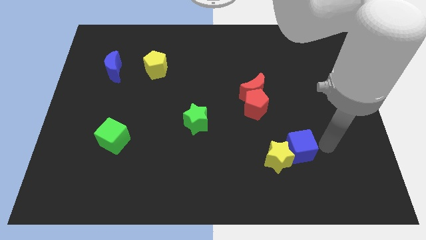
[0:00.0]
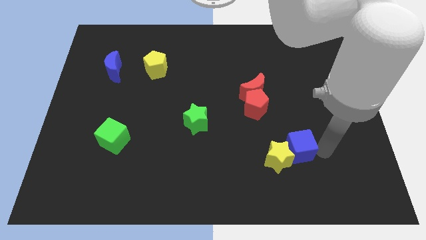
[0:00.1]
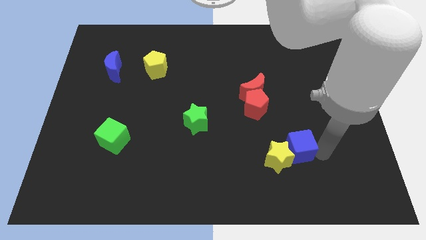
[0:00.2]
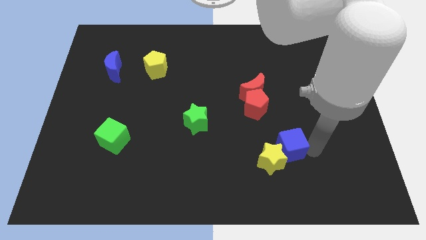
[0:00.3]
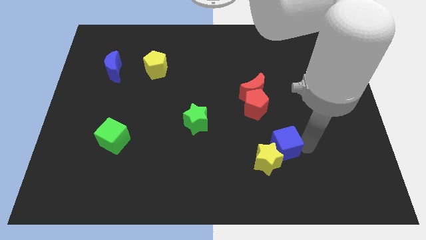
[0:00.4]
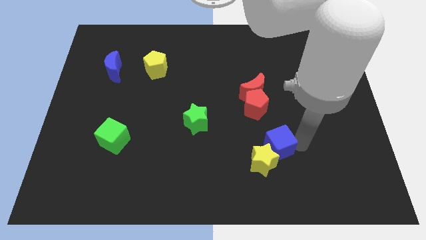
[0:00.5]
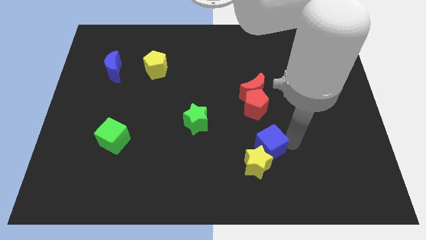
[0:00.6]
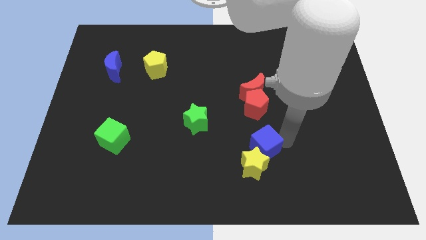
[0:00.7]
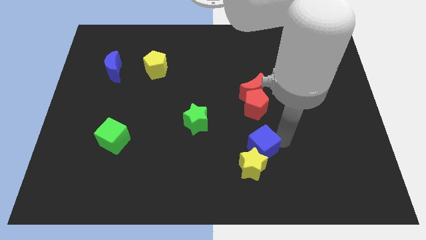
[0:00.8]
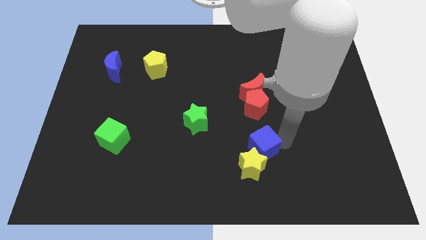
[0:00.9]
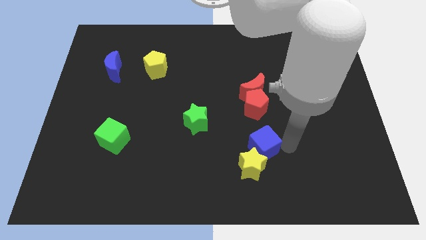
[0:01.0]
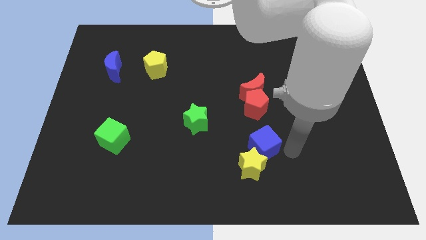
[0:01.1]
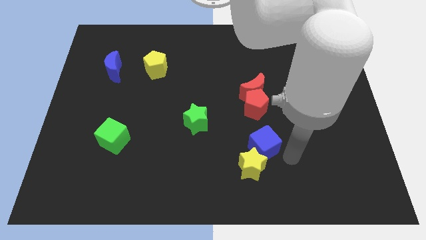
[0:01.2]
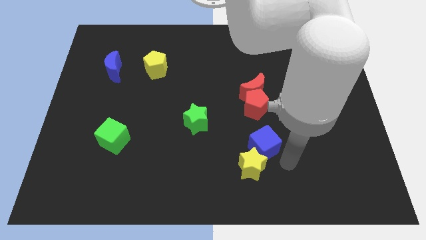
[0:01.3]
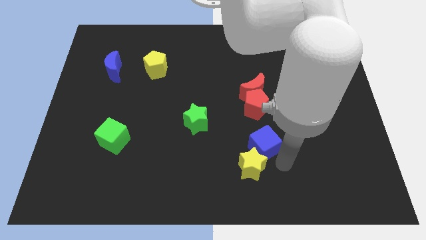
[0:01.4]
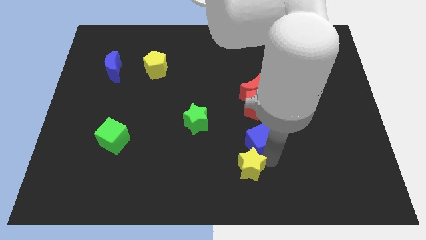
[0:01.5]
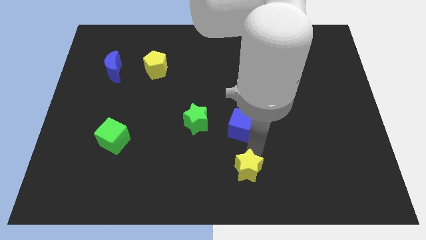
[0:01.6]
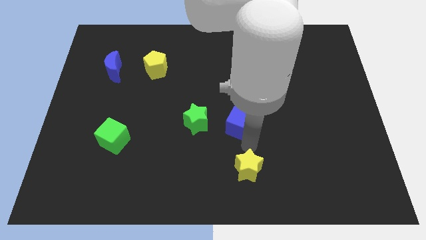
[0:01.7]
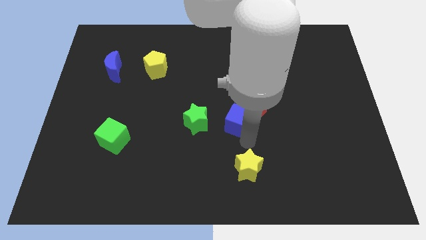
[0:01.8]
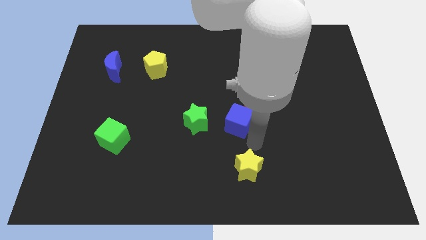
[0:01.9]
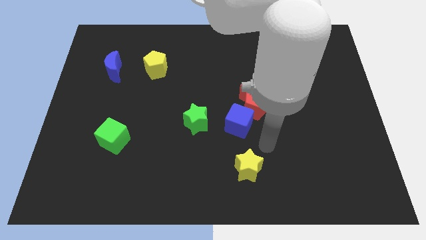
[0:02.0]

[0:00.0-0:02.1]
separate the blue cube and yellow star

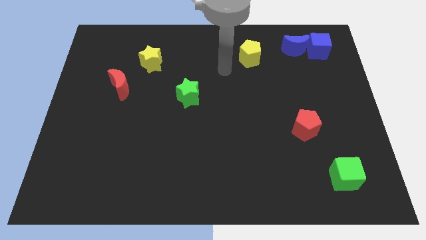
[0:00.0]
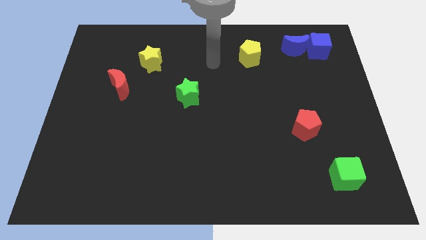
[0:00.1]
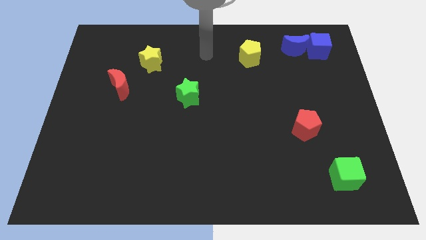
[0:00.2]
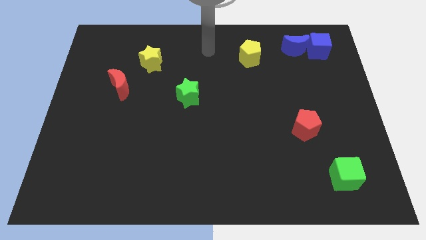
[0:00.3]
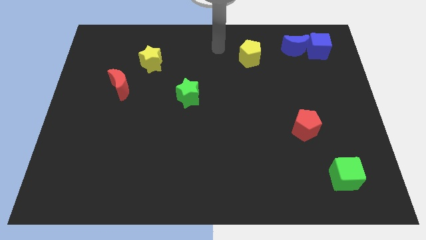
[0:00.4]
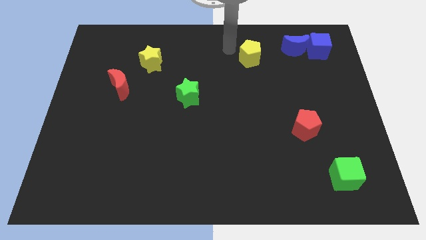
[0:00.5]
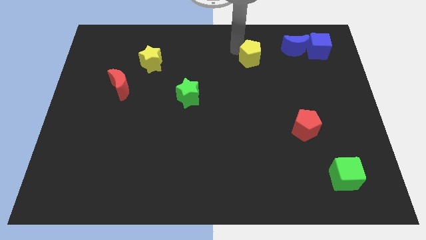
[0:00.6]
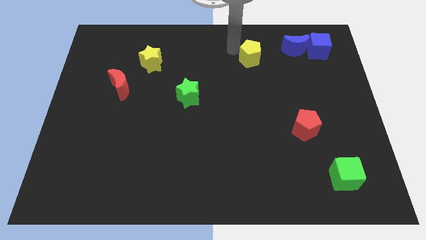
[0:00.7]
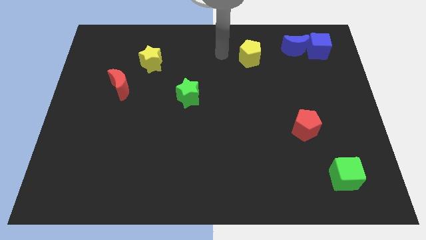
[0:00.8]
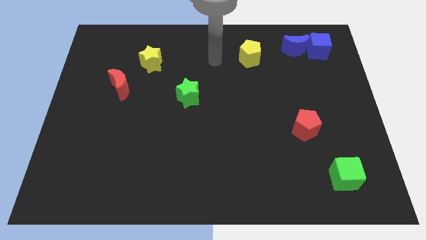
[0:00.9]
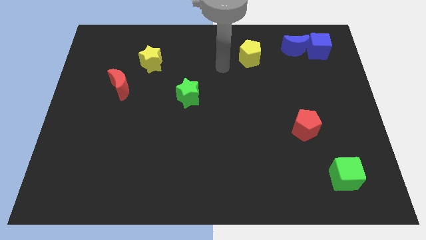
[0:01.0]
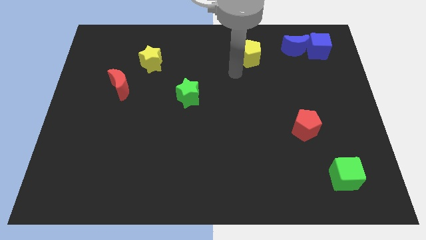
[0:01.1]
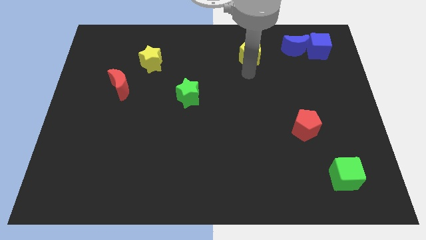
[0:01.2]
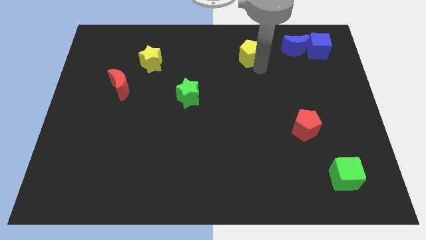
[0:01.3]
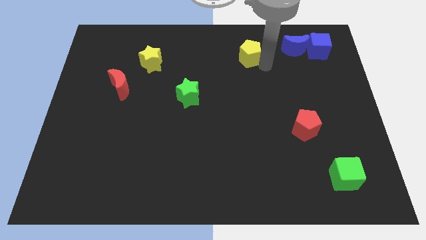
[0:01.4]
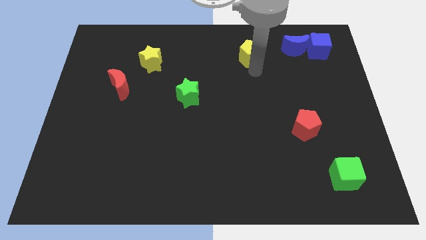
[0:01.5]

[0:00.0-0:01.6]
place the pointer at the bottom of the yellow pentagon

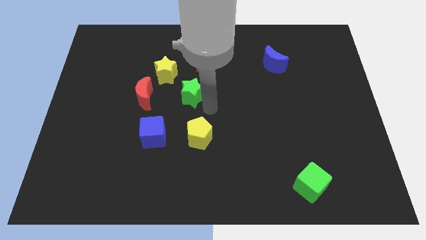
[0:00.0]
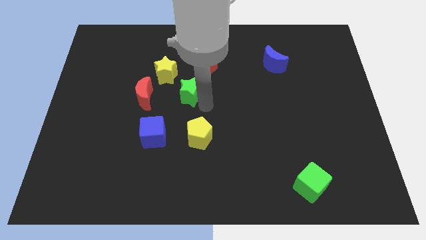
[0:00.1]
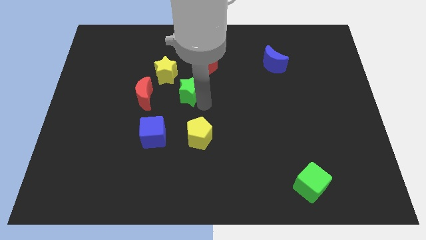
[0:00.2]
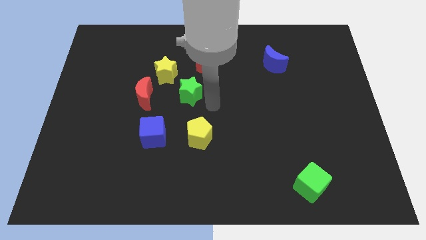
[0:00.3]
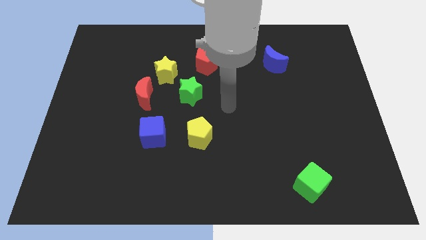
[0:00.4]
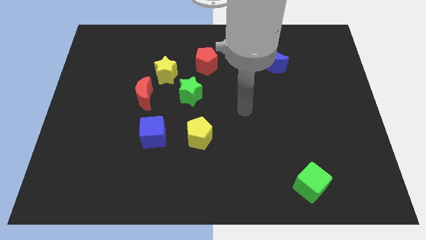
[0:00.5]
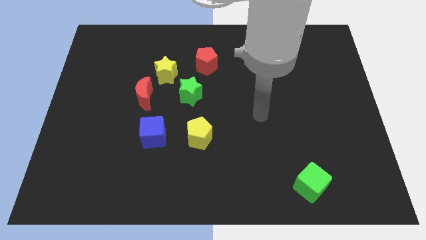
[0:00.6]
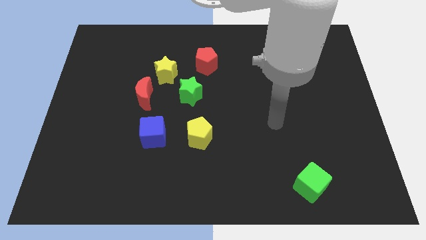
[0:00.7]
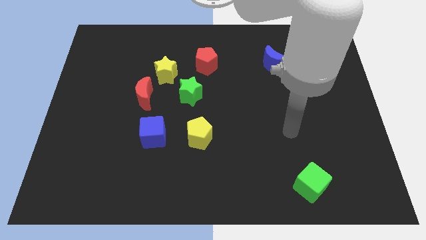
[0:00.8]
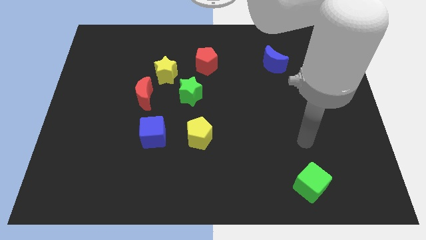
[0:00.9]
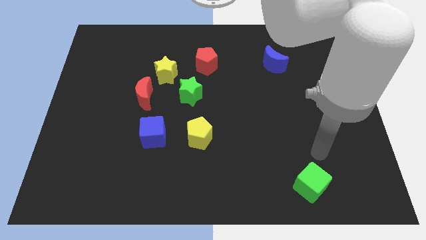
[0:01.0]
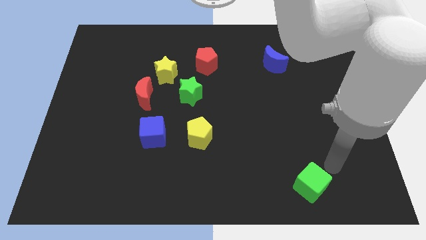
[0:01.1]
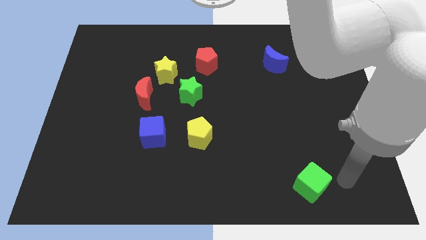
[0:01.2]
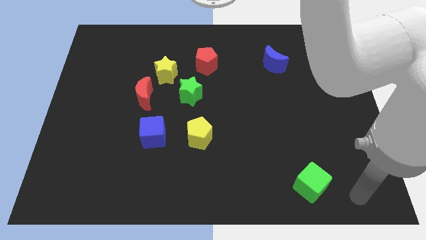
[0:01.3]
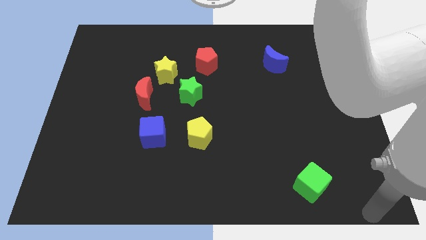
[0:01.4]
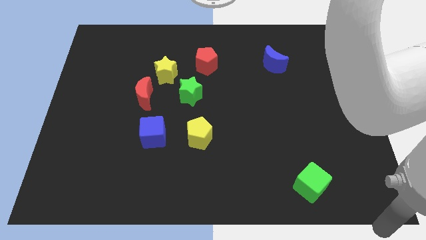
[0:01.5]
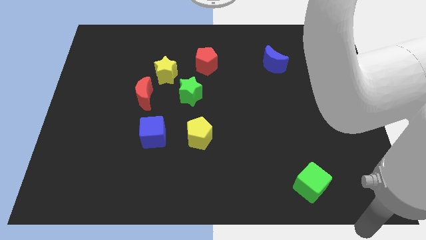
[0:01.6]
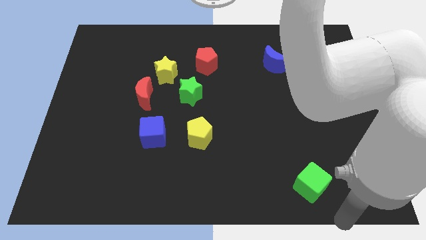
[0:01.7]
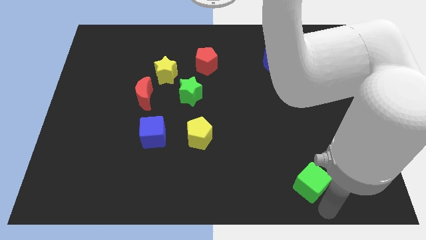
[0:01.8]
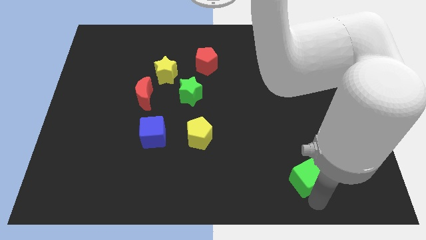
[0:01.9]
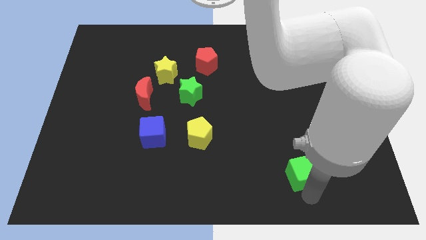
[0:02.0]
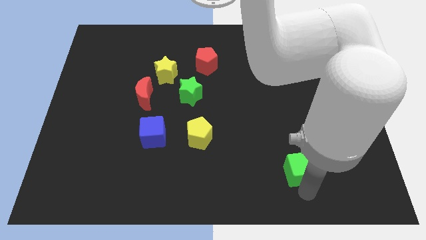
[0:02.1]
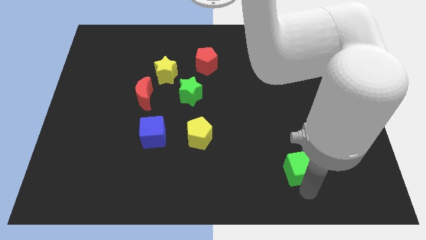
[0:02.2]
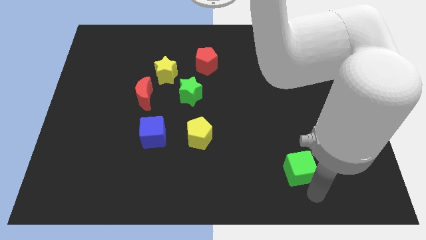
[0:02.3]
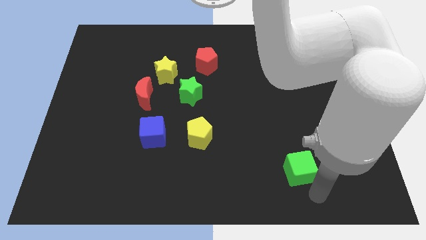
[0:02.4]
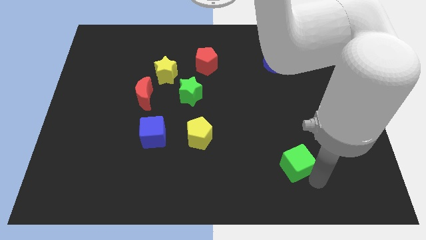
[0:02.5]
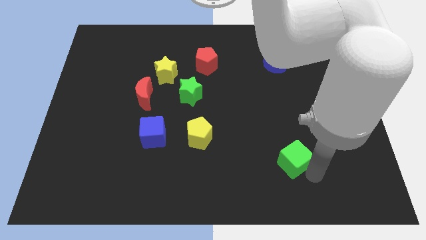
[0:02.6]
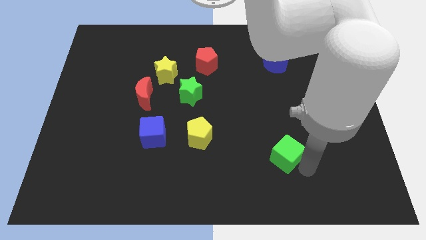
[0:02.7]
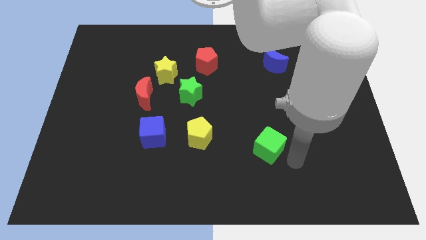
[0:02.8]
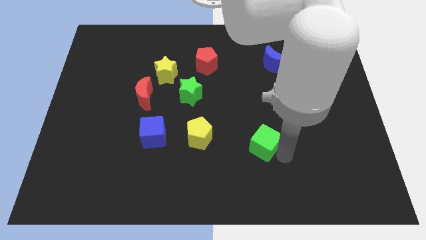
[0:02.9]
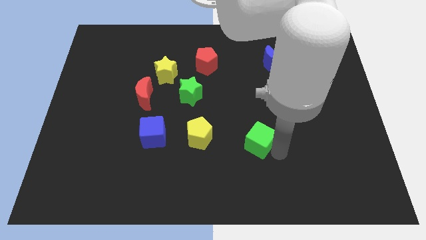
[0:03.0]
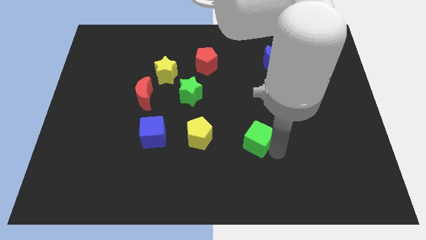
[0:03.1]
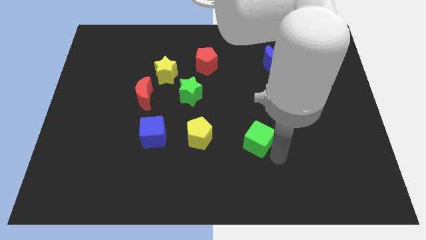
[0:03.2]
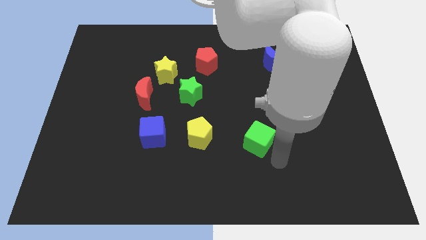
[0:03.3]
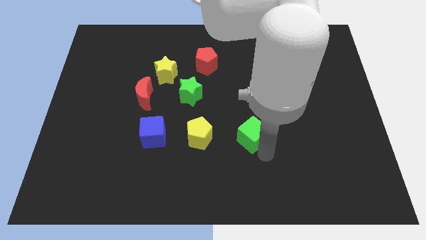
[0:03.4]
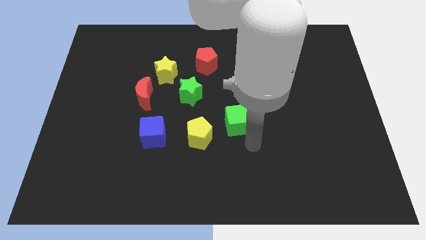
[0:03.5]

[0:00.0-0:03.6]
put the green cube right to the yellow pentagon

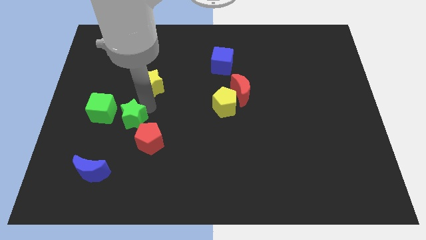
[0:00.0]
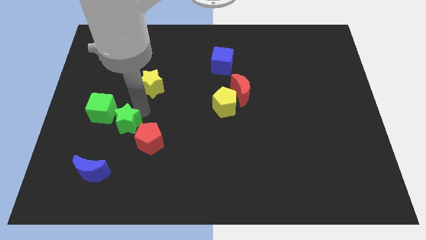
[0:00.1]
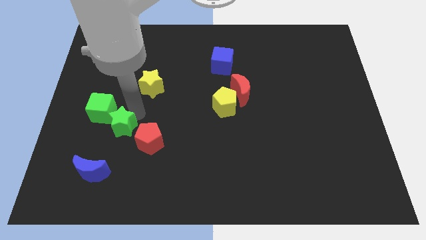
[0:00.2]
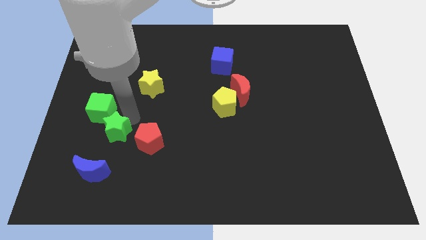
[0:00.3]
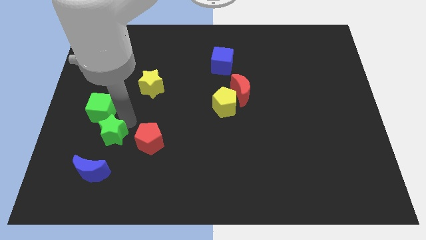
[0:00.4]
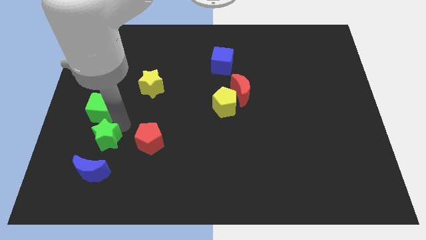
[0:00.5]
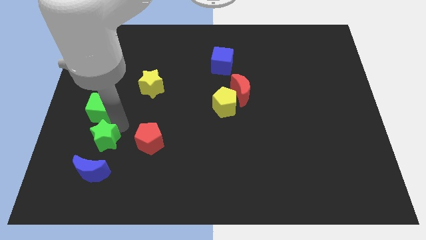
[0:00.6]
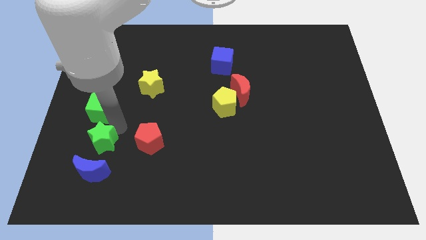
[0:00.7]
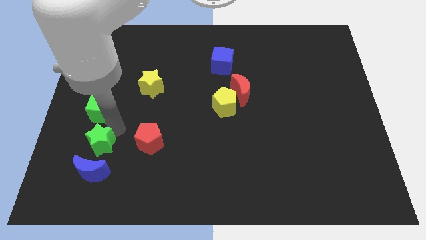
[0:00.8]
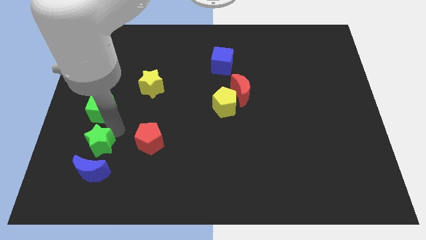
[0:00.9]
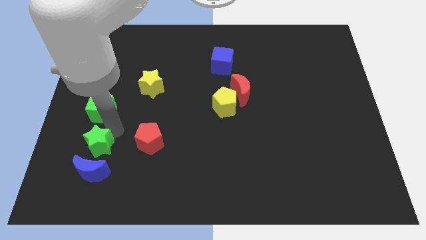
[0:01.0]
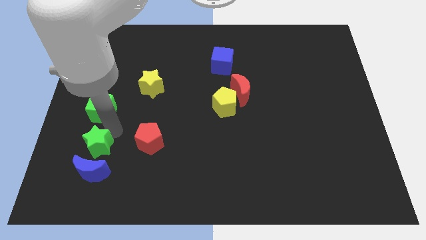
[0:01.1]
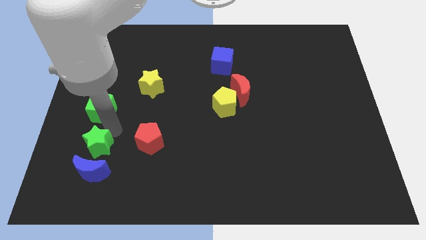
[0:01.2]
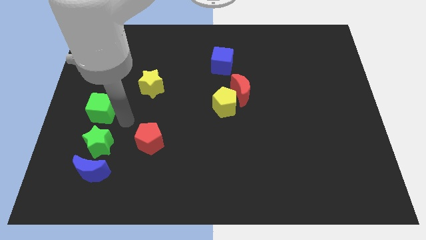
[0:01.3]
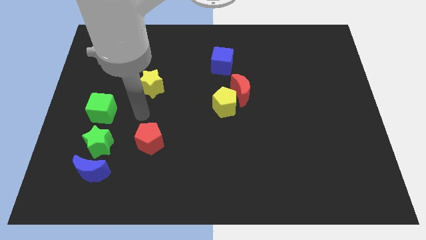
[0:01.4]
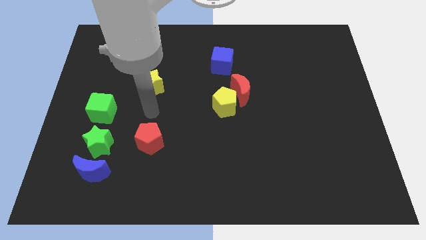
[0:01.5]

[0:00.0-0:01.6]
place the green star between blue moon and green cube

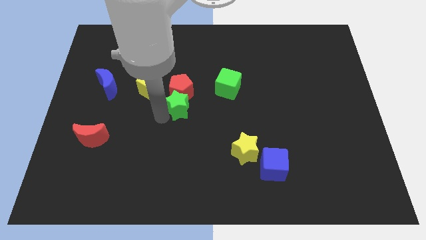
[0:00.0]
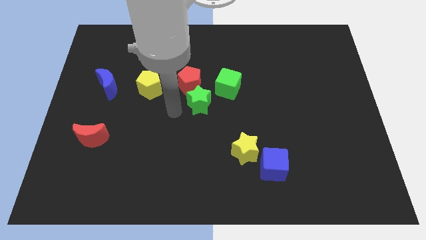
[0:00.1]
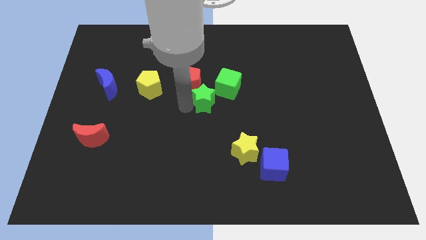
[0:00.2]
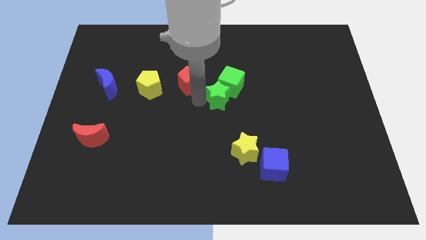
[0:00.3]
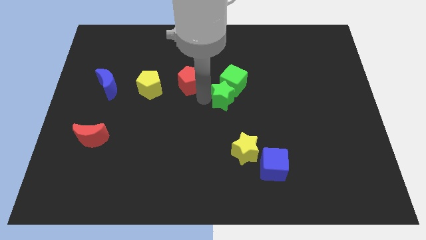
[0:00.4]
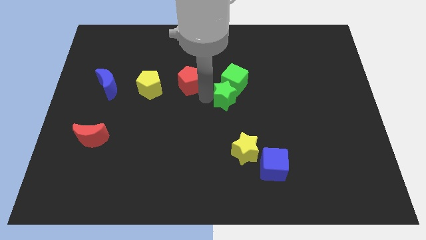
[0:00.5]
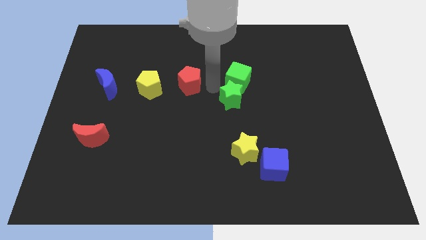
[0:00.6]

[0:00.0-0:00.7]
push the green star into green cube
